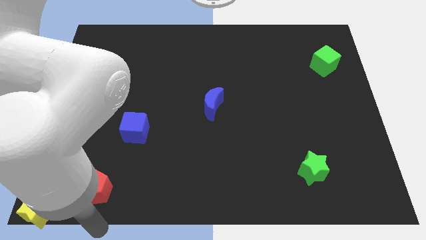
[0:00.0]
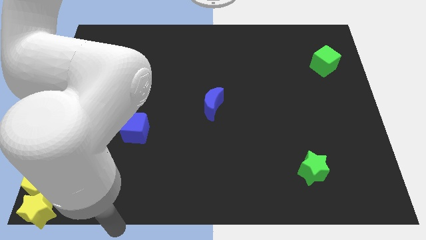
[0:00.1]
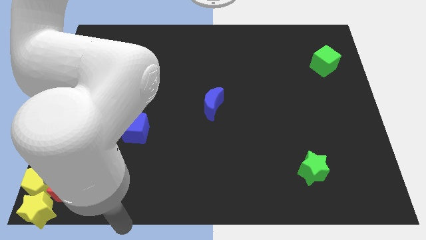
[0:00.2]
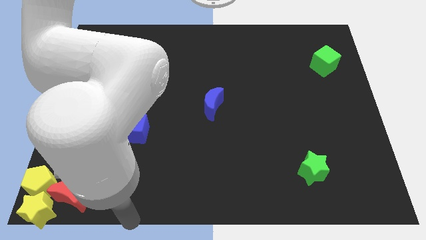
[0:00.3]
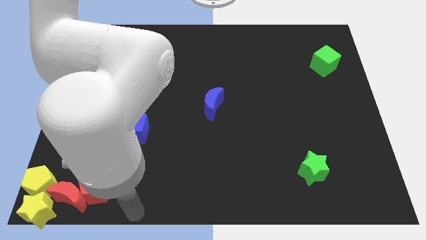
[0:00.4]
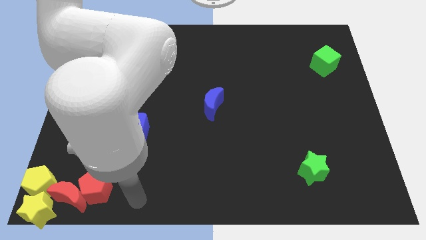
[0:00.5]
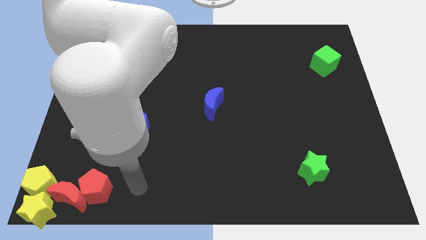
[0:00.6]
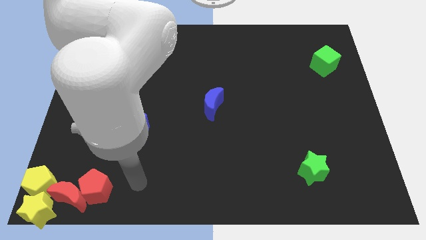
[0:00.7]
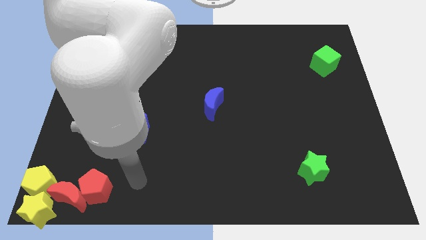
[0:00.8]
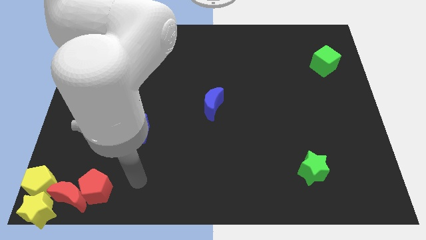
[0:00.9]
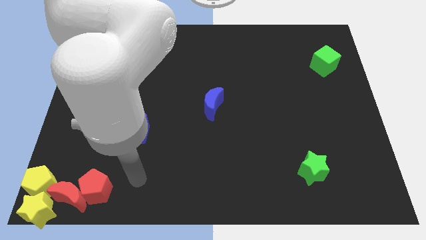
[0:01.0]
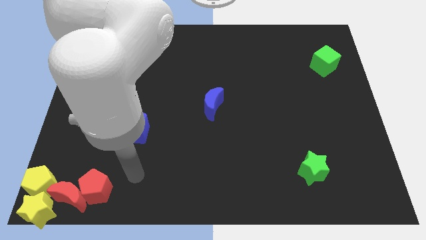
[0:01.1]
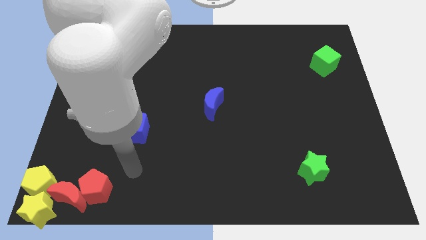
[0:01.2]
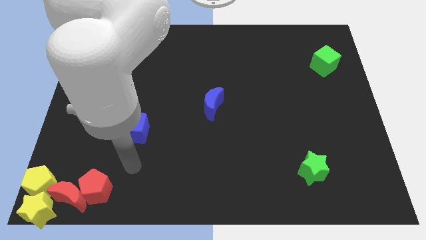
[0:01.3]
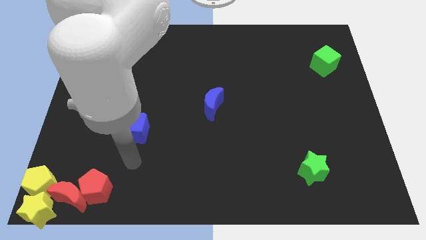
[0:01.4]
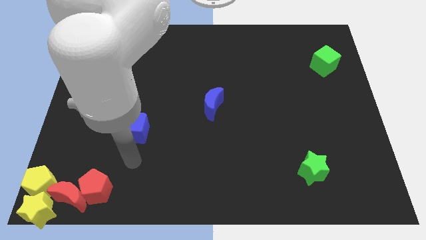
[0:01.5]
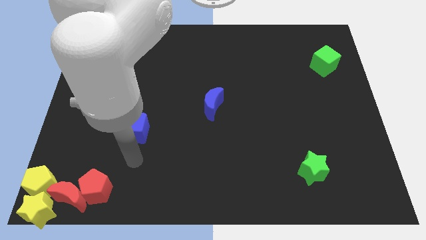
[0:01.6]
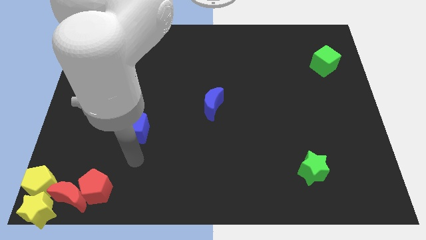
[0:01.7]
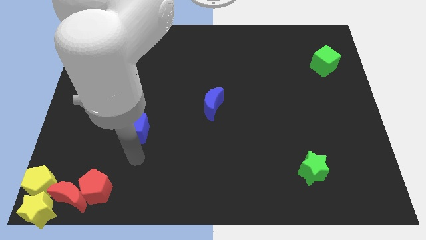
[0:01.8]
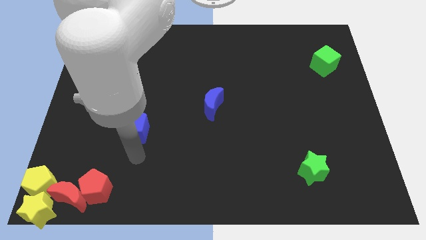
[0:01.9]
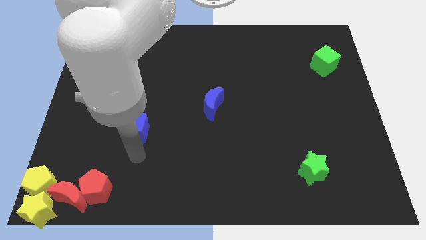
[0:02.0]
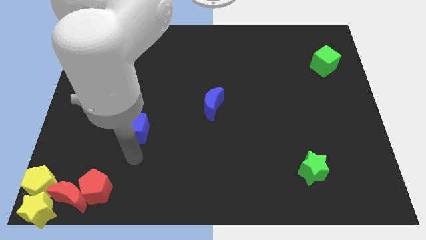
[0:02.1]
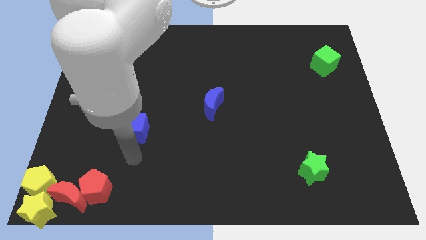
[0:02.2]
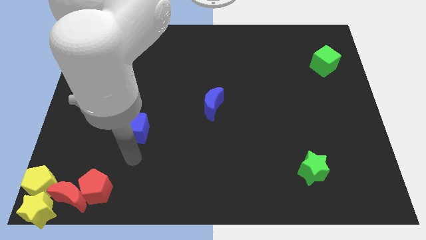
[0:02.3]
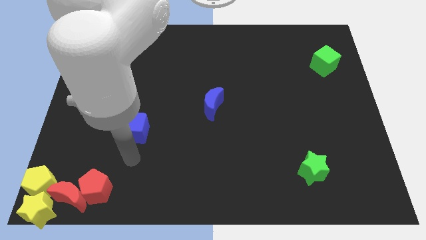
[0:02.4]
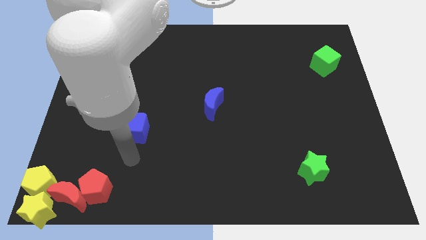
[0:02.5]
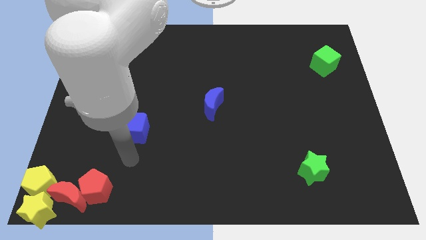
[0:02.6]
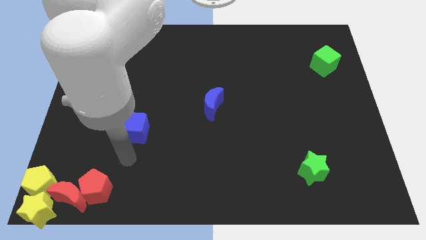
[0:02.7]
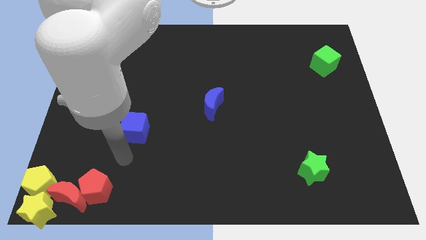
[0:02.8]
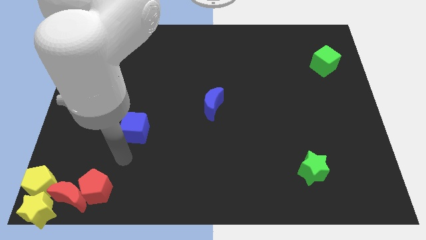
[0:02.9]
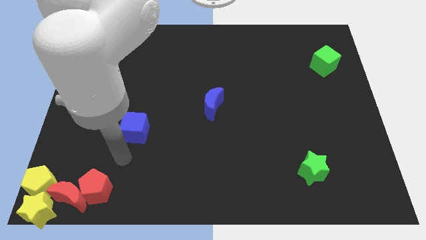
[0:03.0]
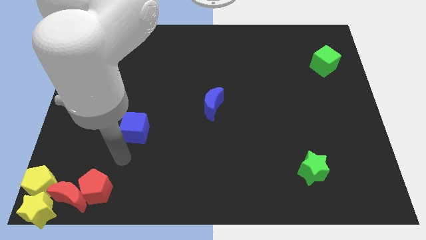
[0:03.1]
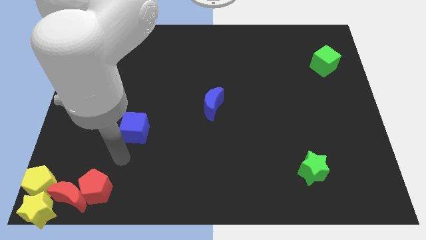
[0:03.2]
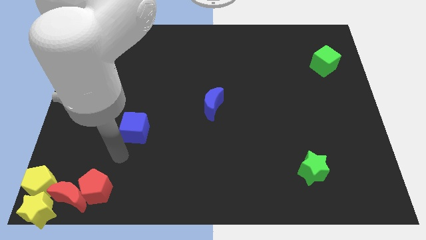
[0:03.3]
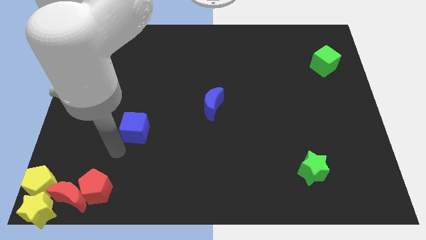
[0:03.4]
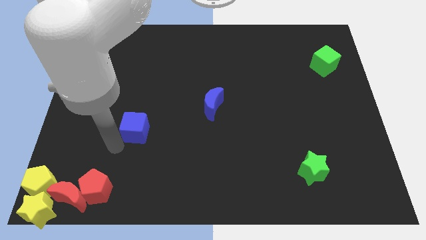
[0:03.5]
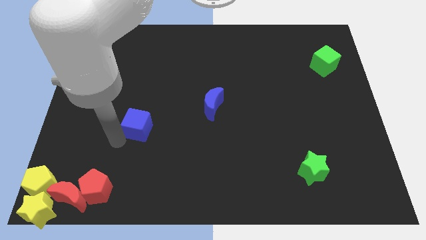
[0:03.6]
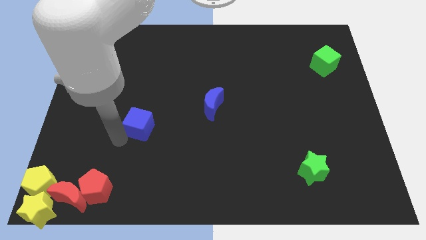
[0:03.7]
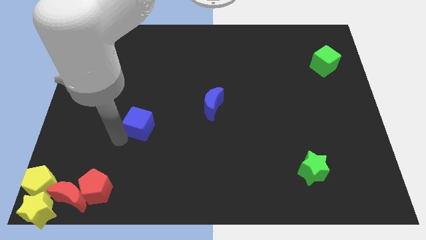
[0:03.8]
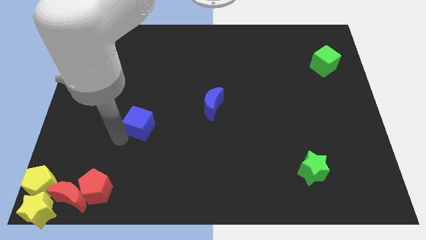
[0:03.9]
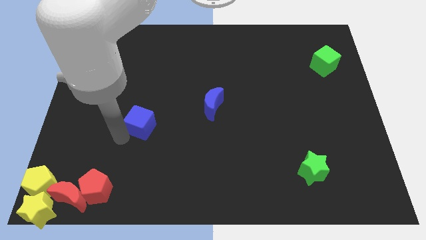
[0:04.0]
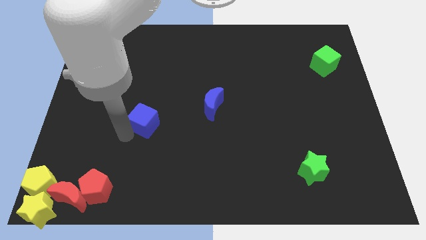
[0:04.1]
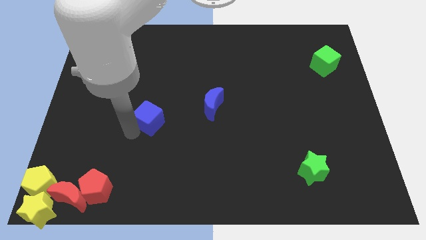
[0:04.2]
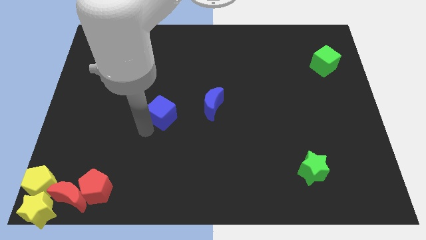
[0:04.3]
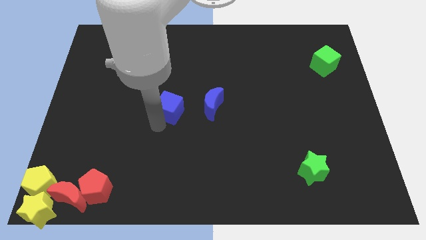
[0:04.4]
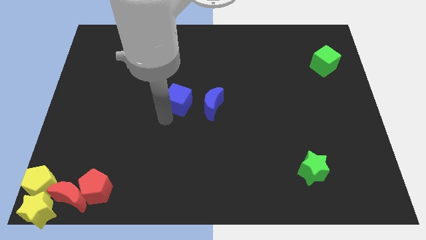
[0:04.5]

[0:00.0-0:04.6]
move blue cube to the left of blue moon

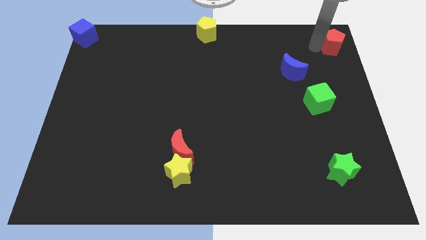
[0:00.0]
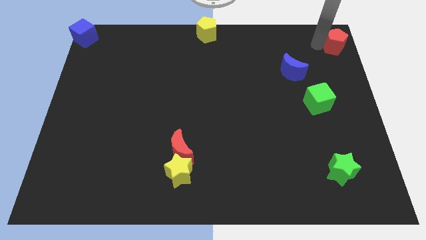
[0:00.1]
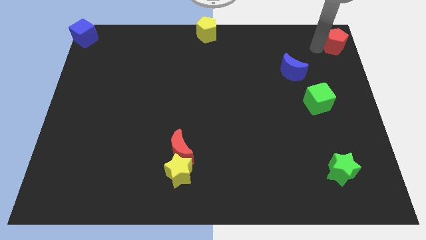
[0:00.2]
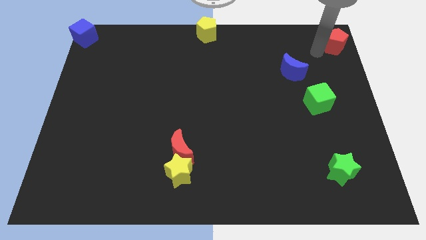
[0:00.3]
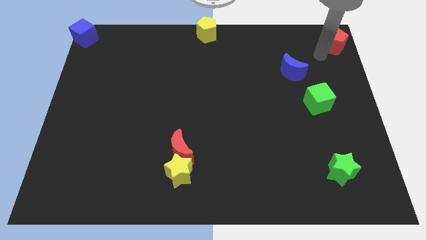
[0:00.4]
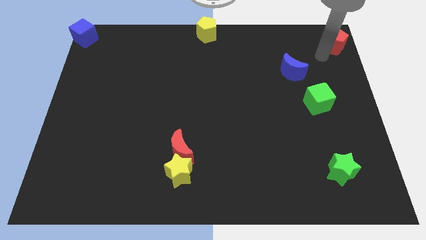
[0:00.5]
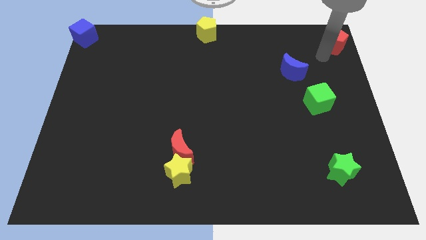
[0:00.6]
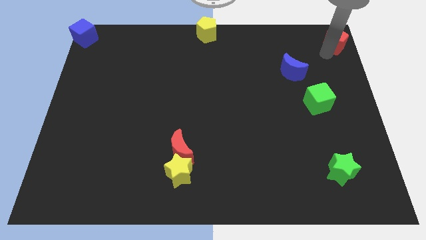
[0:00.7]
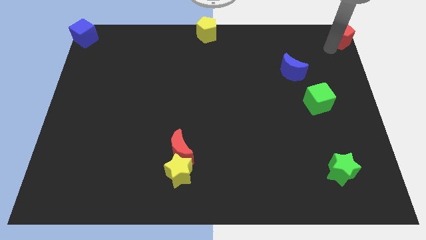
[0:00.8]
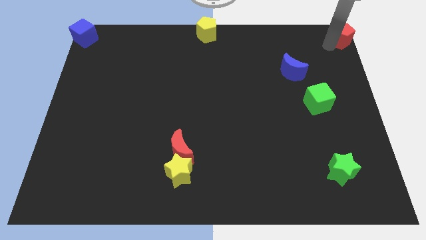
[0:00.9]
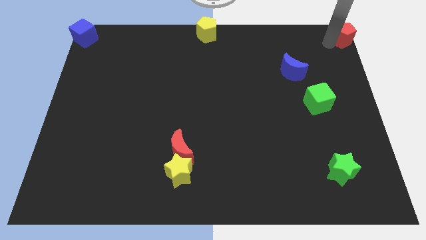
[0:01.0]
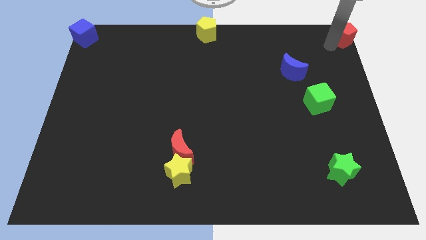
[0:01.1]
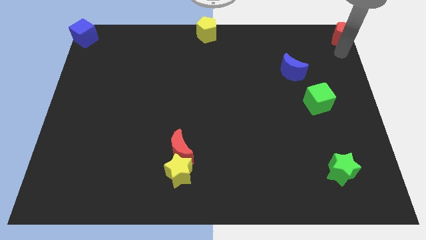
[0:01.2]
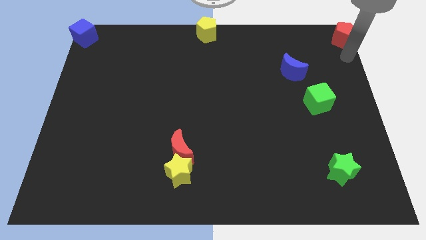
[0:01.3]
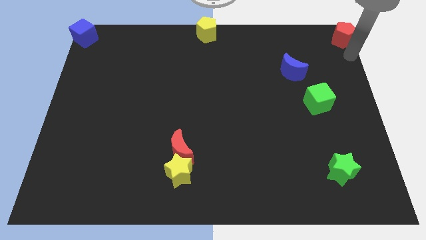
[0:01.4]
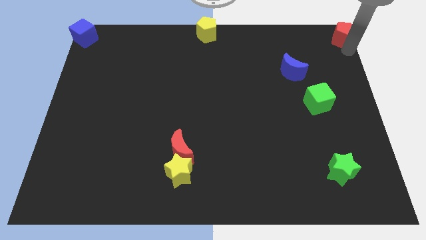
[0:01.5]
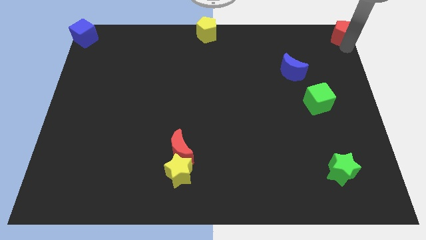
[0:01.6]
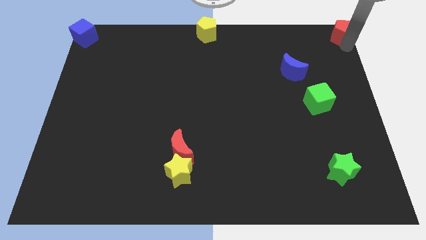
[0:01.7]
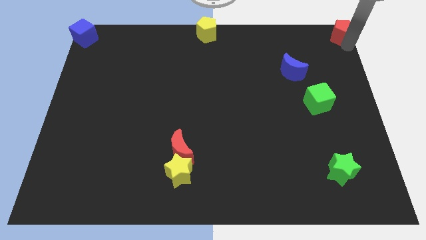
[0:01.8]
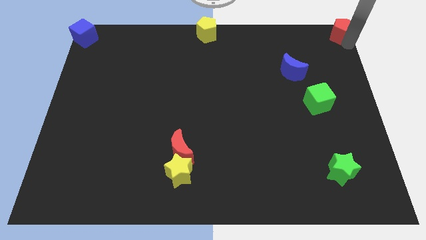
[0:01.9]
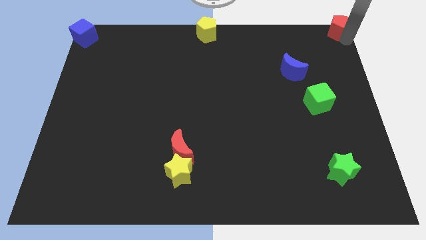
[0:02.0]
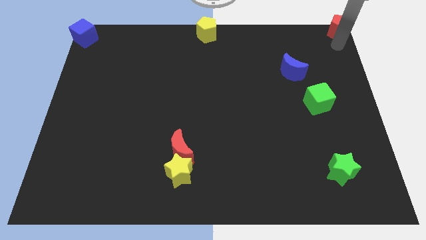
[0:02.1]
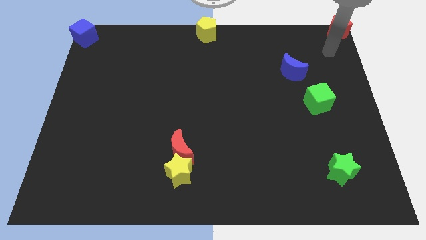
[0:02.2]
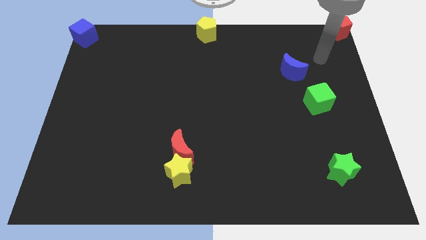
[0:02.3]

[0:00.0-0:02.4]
push the red pentagon to the top right corner

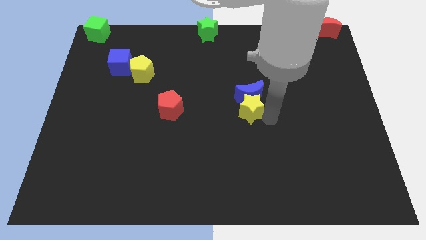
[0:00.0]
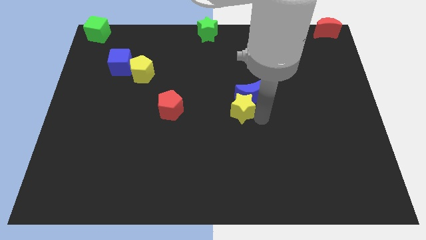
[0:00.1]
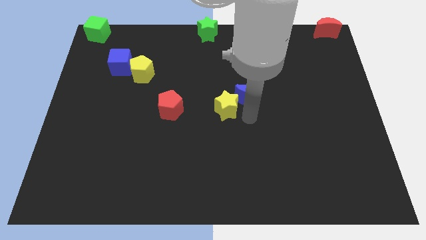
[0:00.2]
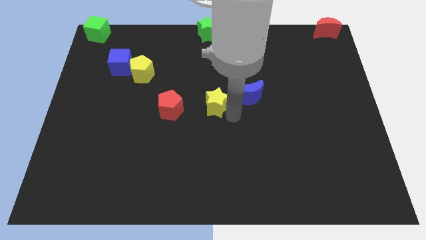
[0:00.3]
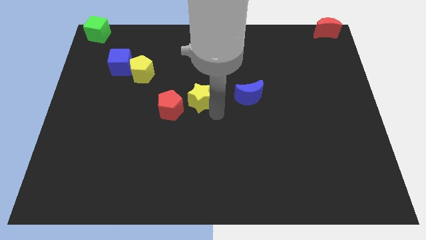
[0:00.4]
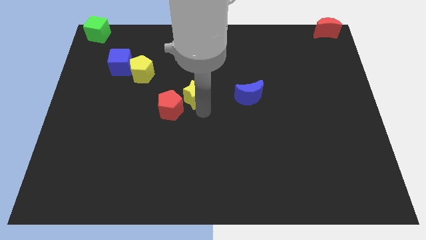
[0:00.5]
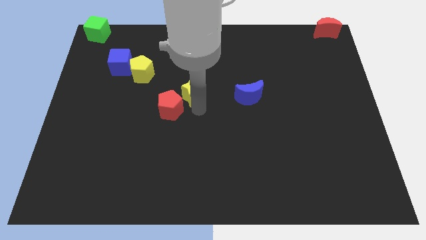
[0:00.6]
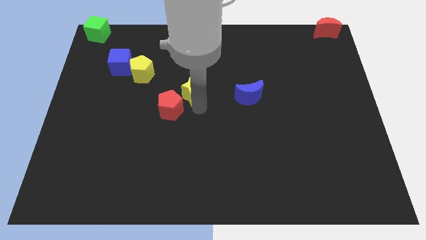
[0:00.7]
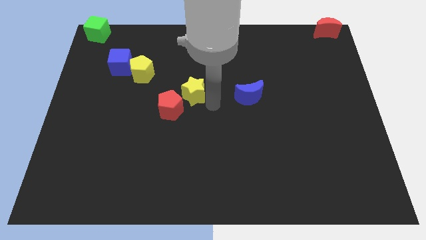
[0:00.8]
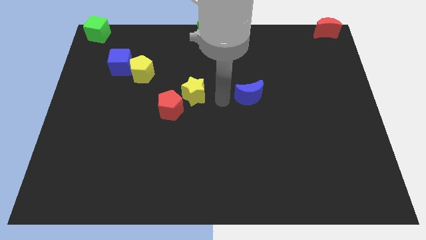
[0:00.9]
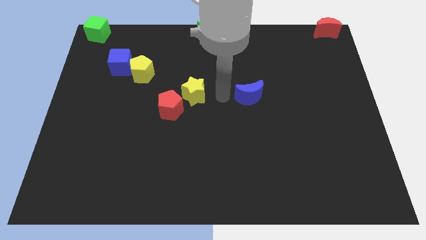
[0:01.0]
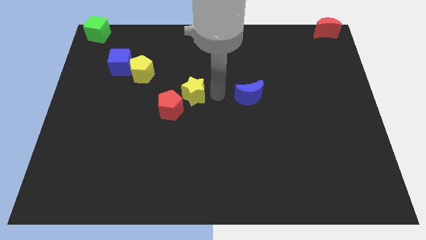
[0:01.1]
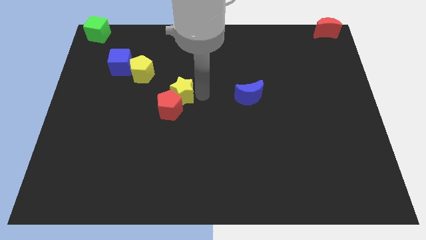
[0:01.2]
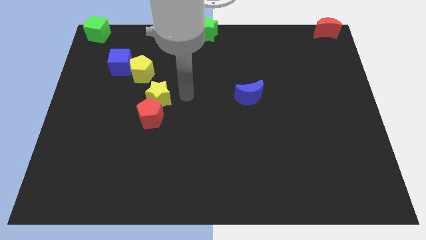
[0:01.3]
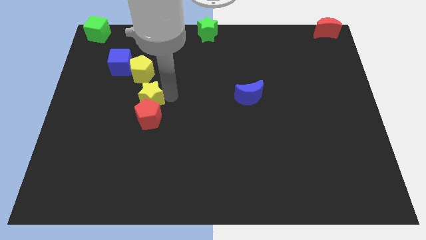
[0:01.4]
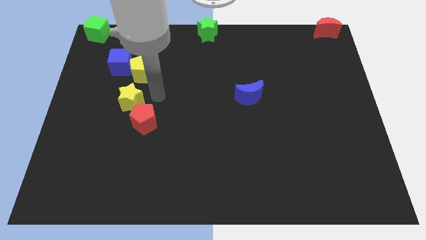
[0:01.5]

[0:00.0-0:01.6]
put the yellow star above the red pentagon

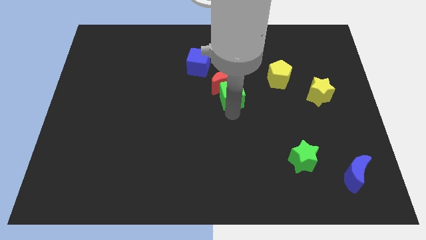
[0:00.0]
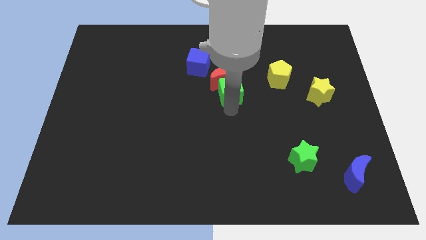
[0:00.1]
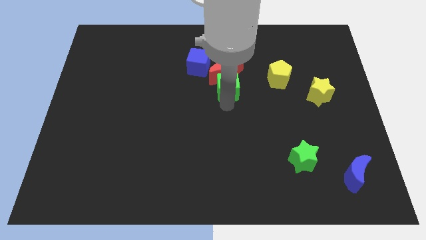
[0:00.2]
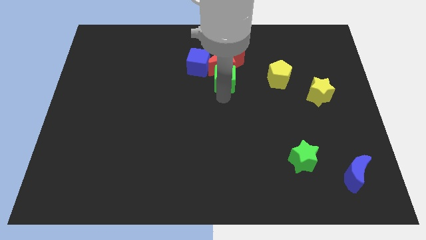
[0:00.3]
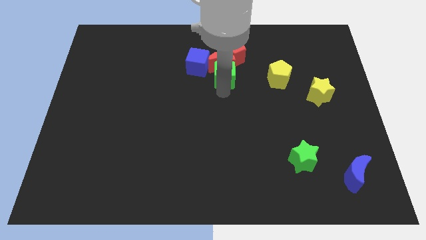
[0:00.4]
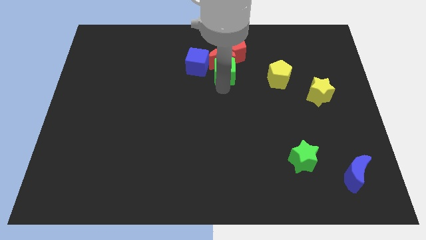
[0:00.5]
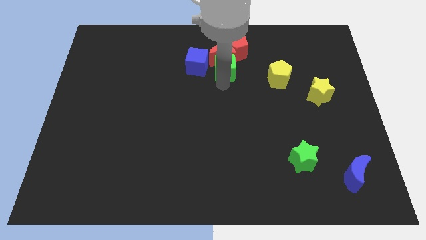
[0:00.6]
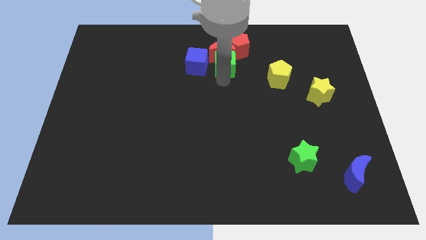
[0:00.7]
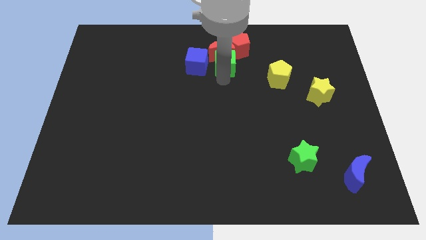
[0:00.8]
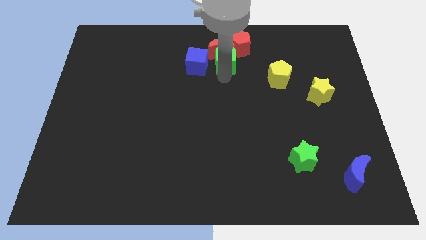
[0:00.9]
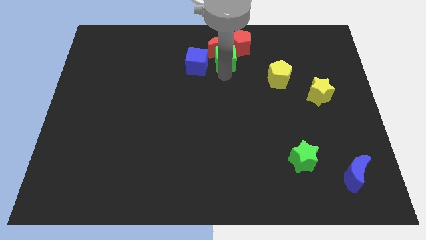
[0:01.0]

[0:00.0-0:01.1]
place the green cube to the right of the blue cube
